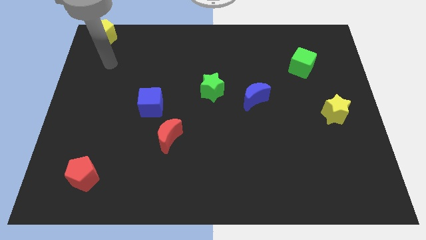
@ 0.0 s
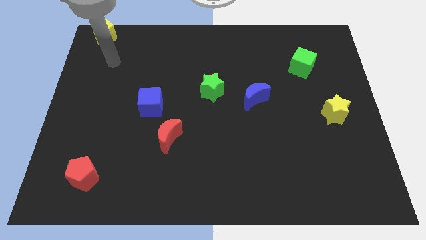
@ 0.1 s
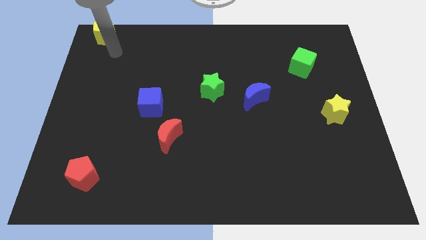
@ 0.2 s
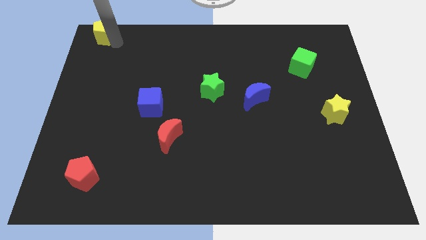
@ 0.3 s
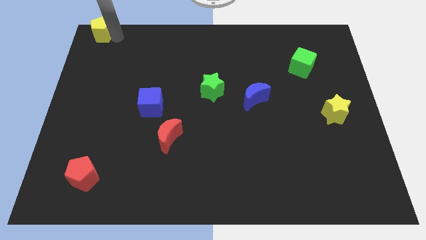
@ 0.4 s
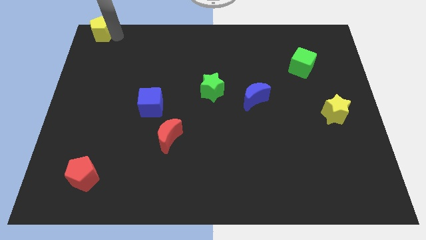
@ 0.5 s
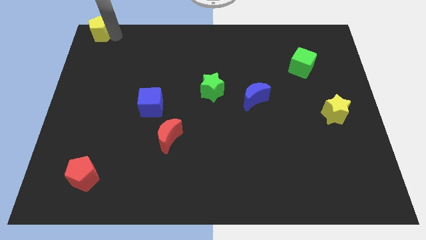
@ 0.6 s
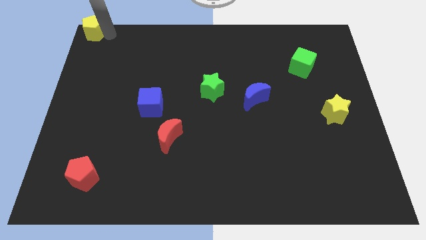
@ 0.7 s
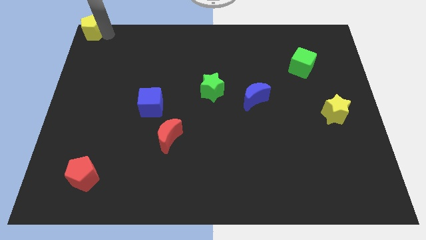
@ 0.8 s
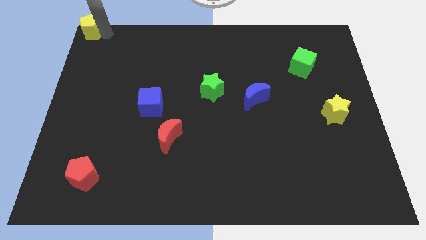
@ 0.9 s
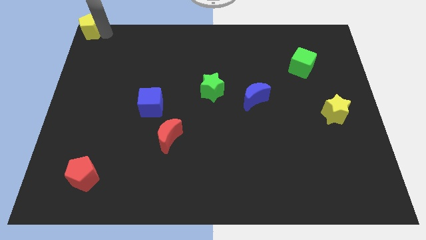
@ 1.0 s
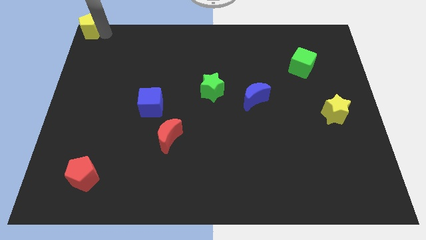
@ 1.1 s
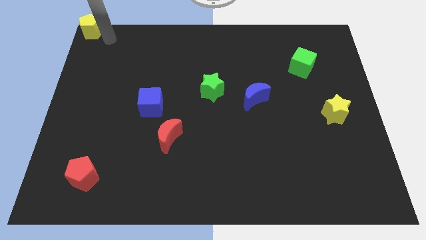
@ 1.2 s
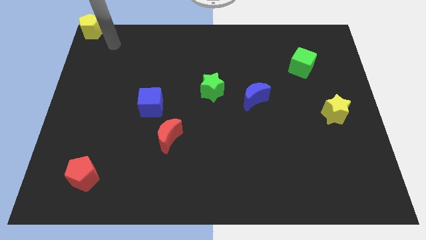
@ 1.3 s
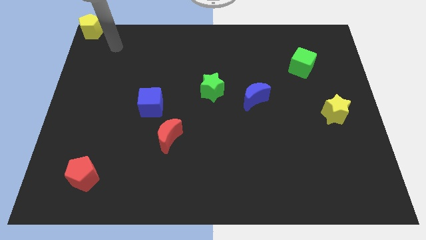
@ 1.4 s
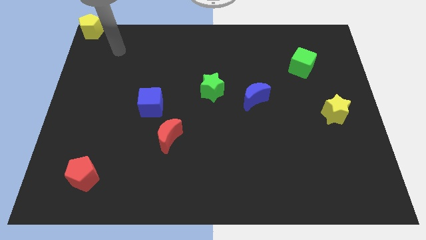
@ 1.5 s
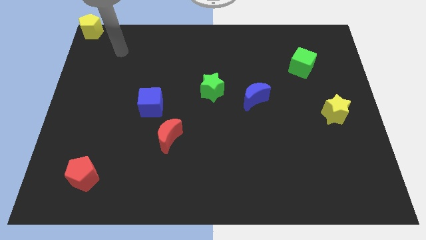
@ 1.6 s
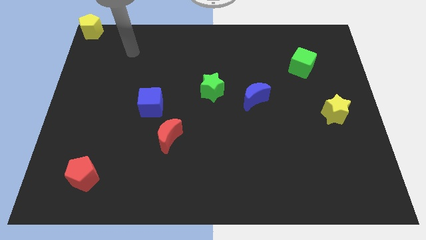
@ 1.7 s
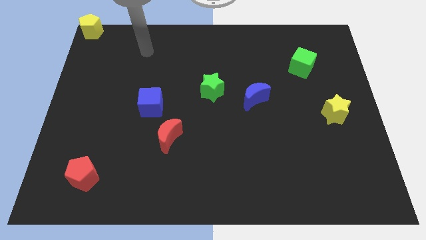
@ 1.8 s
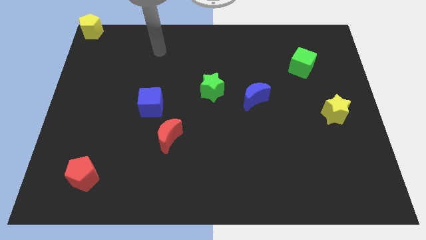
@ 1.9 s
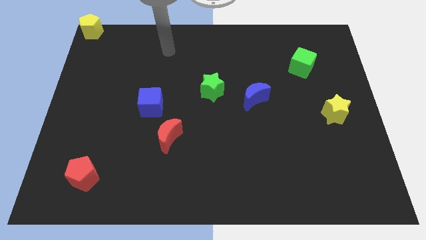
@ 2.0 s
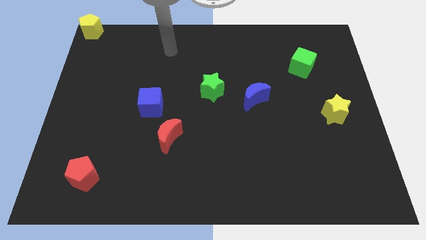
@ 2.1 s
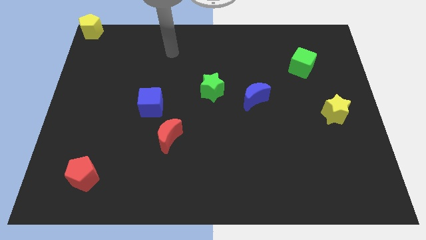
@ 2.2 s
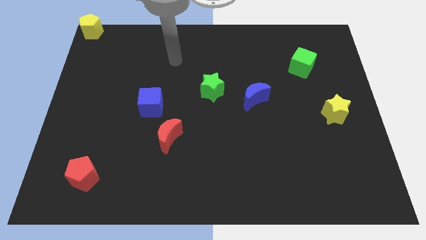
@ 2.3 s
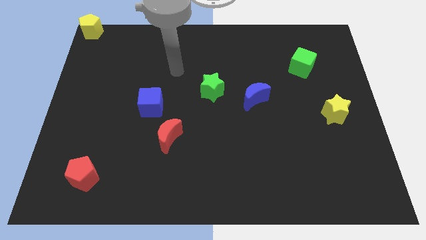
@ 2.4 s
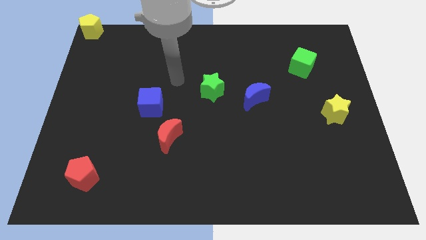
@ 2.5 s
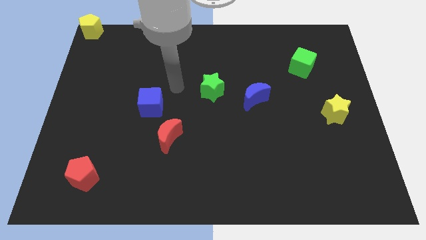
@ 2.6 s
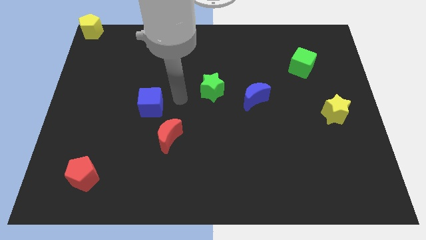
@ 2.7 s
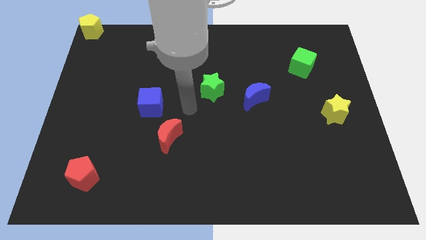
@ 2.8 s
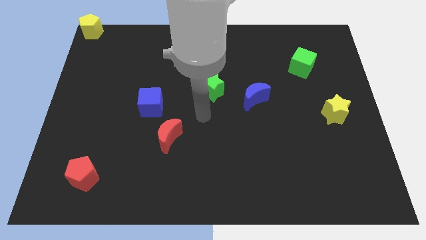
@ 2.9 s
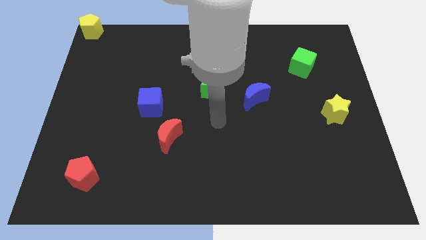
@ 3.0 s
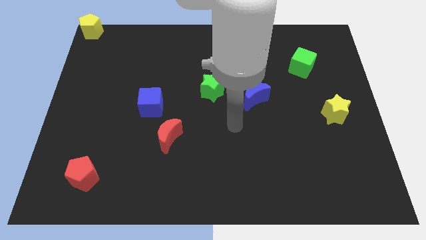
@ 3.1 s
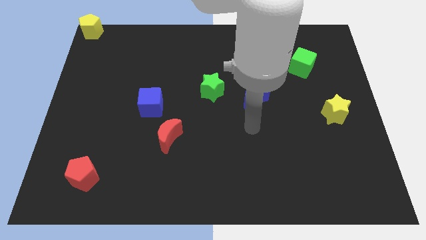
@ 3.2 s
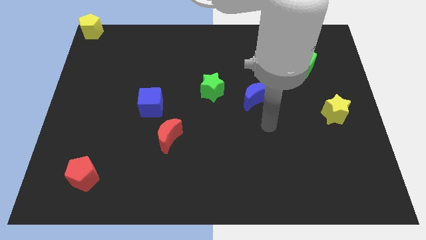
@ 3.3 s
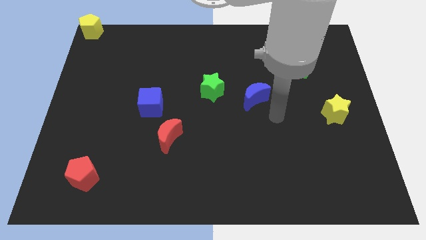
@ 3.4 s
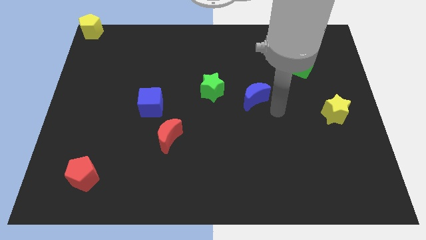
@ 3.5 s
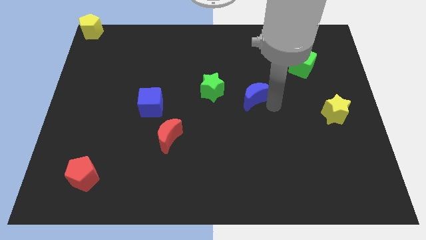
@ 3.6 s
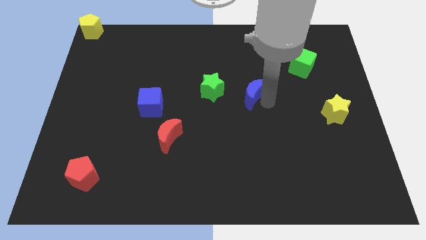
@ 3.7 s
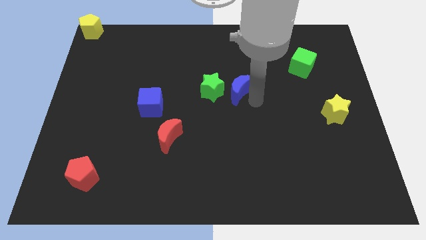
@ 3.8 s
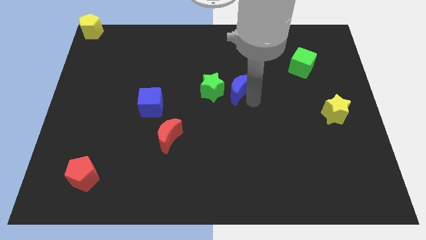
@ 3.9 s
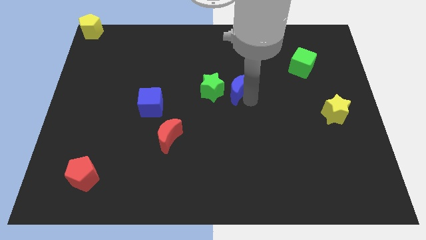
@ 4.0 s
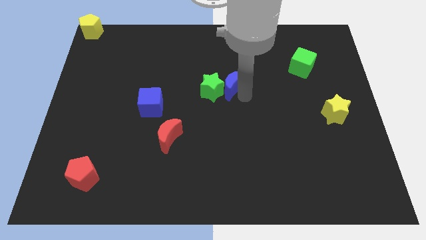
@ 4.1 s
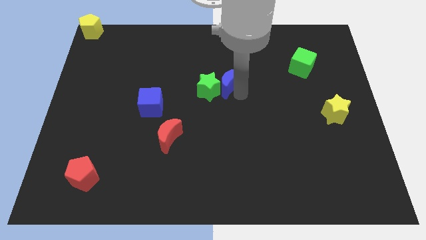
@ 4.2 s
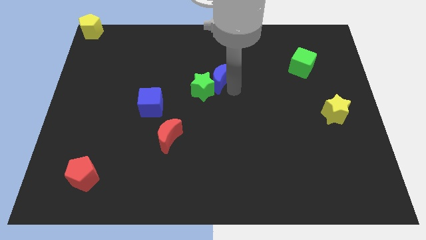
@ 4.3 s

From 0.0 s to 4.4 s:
move the blue moon into the green star

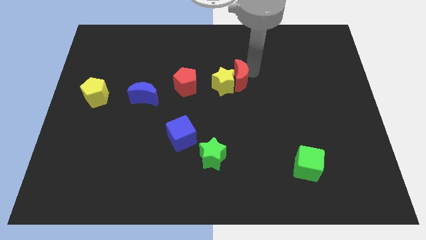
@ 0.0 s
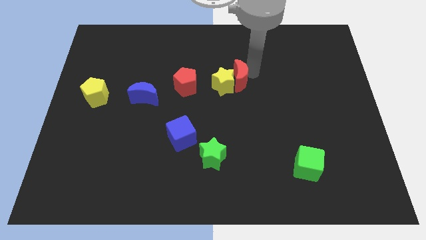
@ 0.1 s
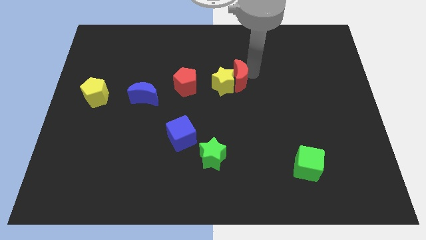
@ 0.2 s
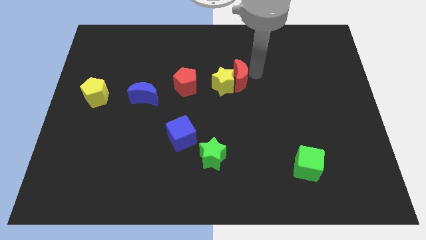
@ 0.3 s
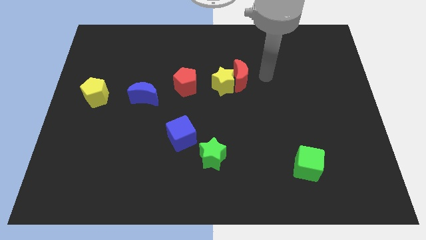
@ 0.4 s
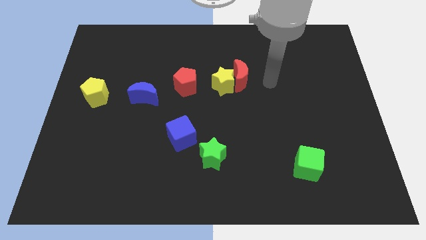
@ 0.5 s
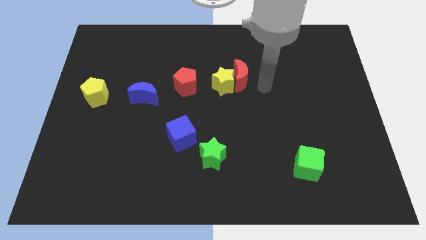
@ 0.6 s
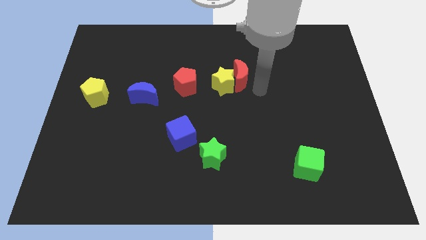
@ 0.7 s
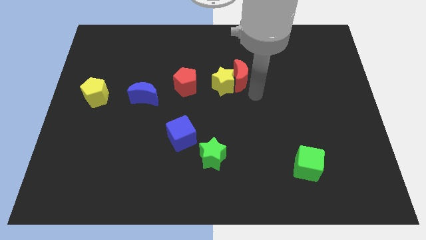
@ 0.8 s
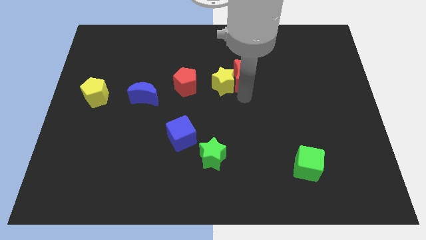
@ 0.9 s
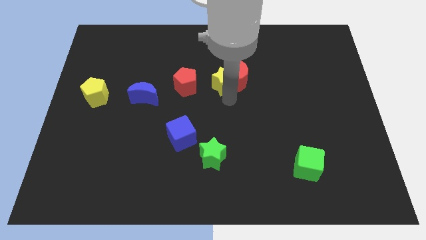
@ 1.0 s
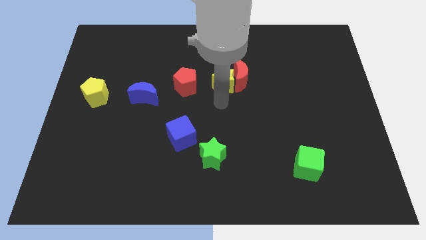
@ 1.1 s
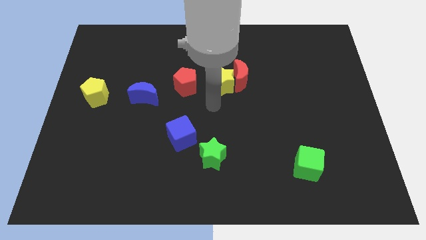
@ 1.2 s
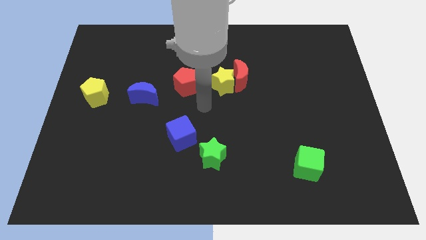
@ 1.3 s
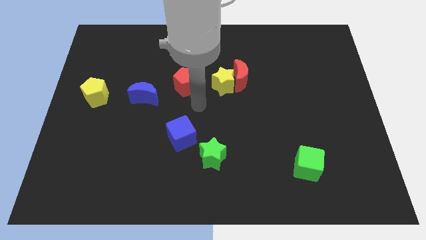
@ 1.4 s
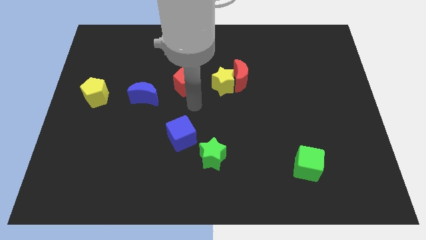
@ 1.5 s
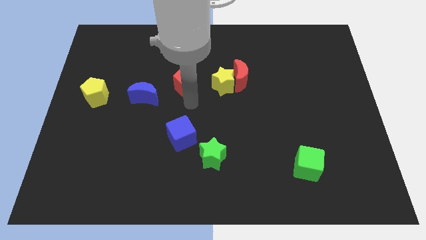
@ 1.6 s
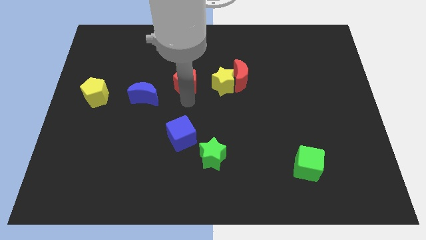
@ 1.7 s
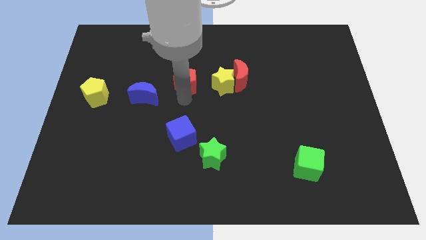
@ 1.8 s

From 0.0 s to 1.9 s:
move the arm to the bottom of the red pentagon

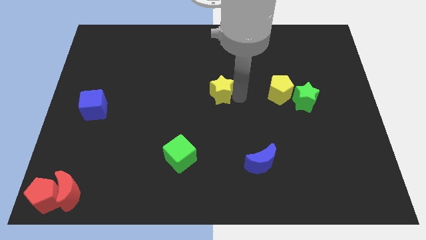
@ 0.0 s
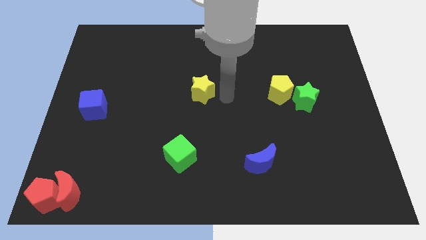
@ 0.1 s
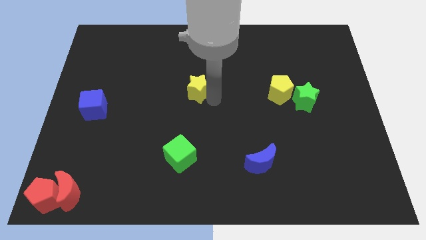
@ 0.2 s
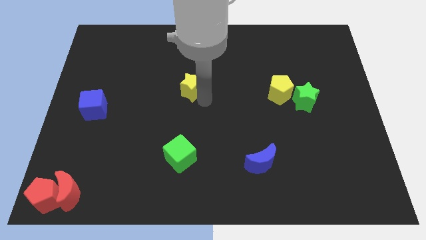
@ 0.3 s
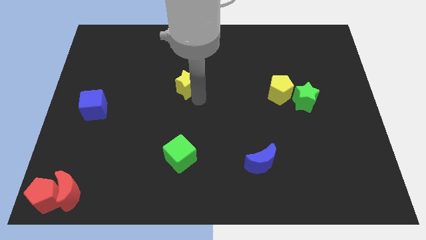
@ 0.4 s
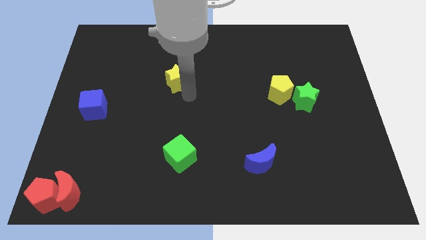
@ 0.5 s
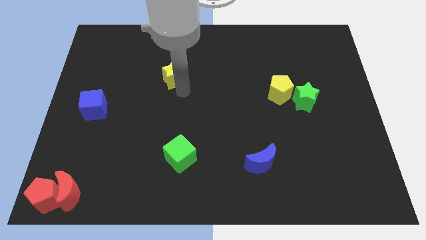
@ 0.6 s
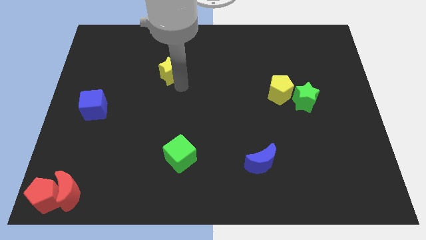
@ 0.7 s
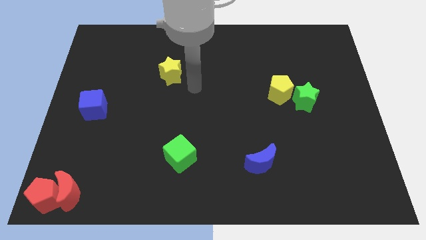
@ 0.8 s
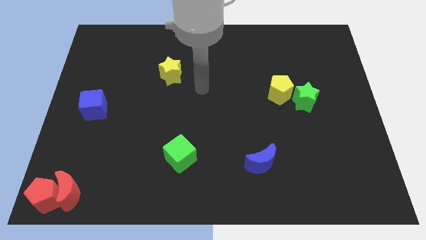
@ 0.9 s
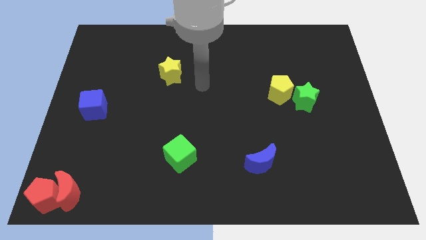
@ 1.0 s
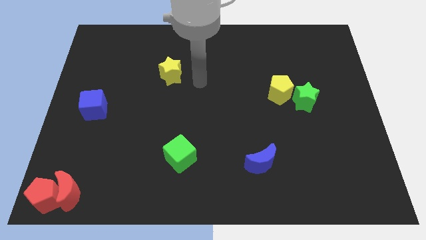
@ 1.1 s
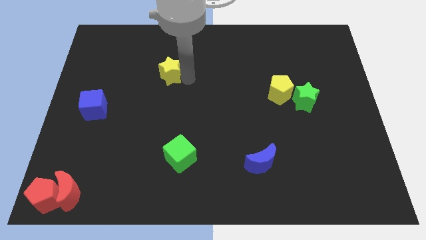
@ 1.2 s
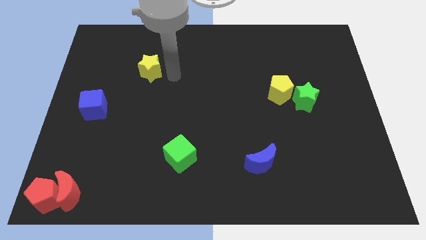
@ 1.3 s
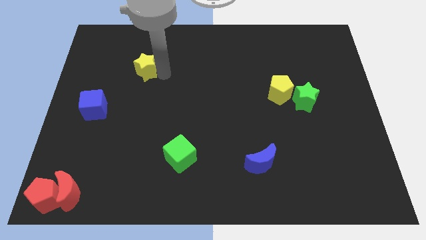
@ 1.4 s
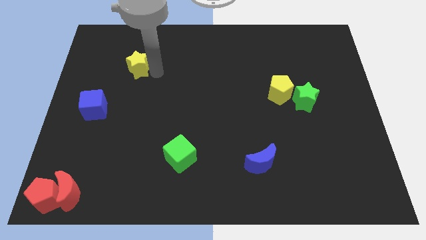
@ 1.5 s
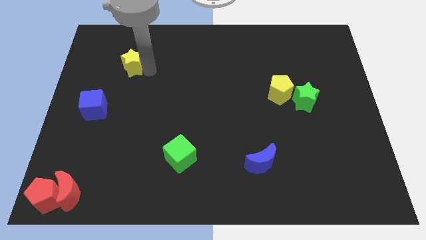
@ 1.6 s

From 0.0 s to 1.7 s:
move the yellow star towards the top left side of the board

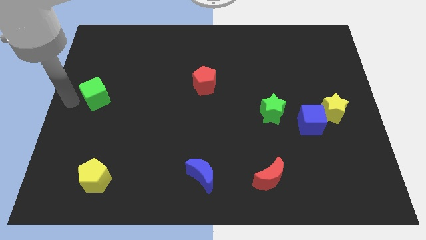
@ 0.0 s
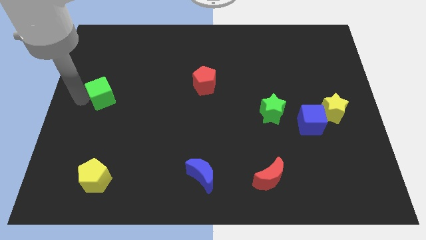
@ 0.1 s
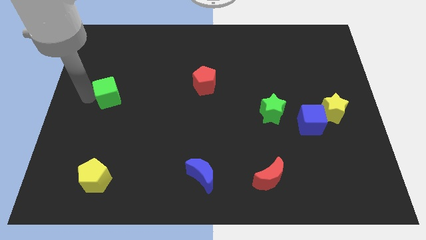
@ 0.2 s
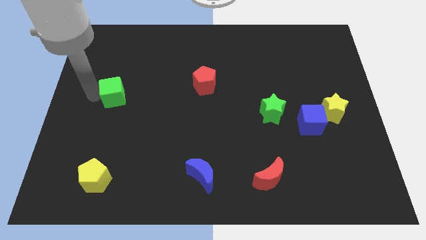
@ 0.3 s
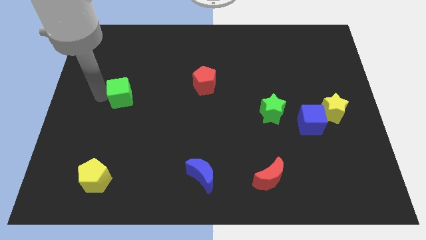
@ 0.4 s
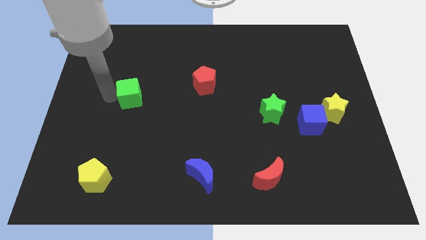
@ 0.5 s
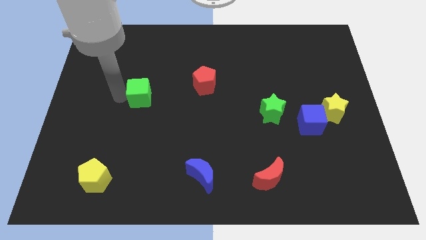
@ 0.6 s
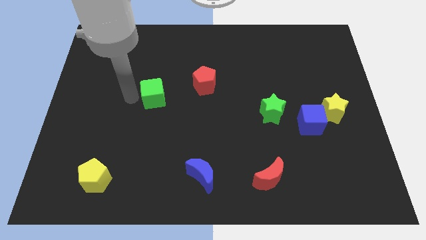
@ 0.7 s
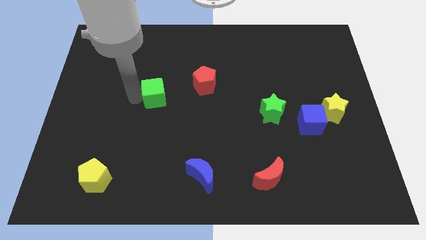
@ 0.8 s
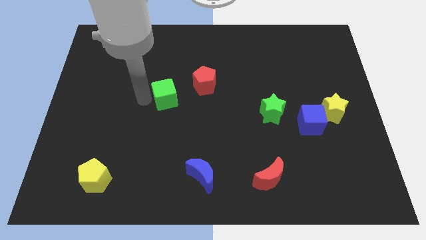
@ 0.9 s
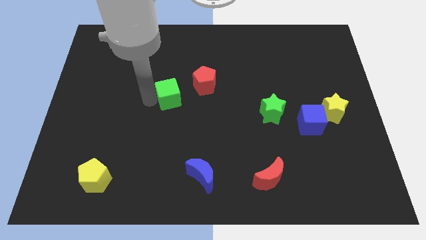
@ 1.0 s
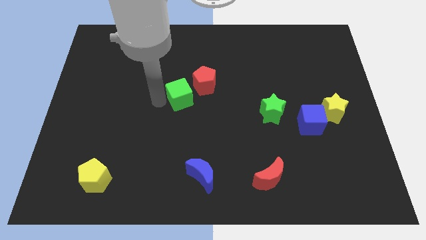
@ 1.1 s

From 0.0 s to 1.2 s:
move green cube towards red pentagon
